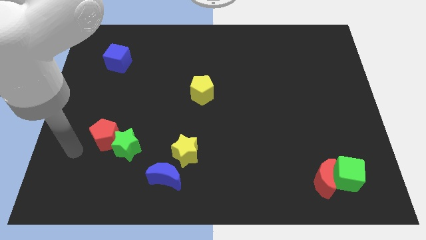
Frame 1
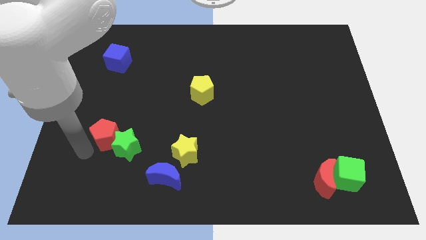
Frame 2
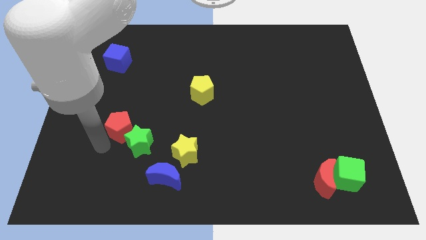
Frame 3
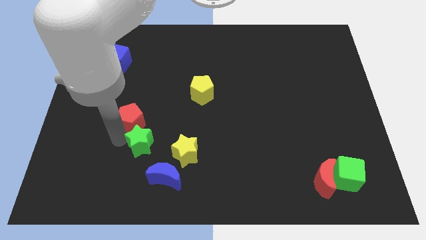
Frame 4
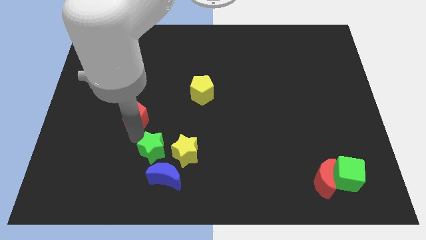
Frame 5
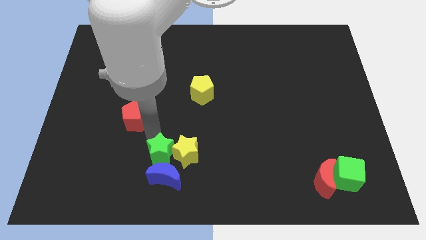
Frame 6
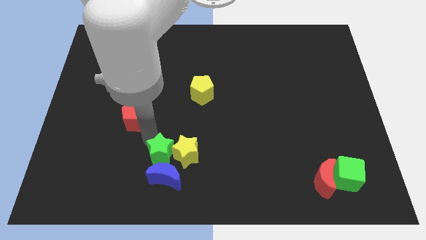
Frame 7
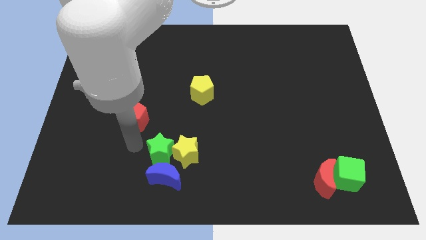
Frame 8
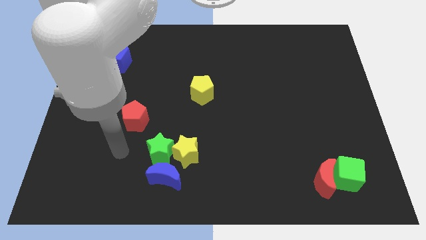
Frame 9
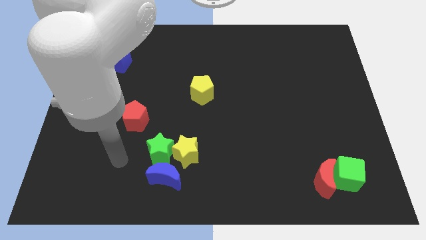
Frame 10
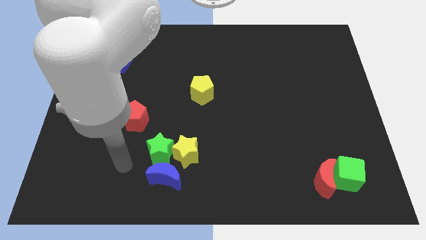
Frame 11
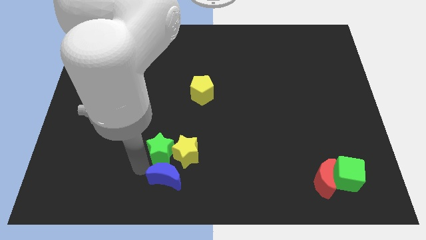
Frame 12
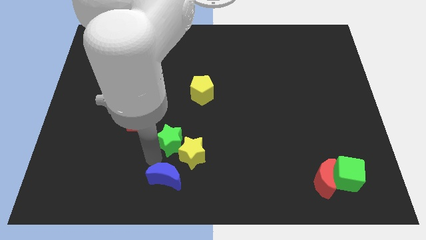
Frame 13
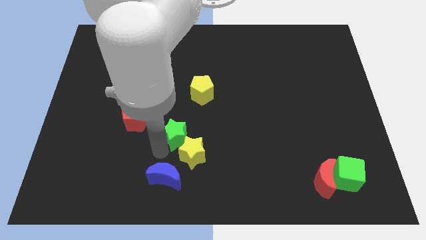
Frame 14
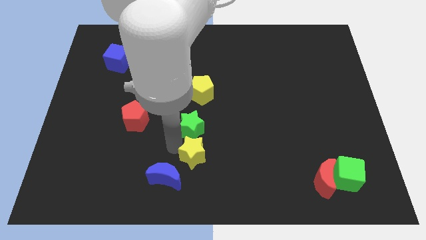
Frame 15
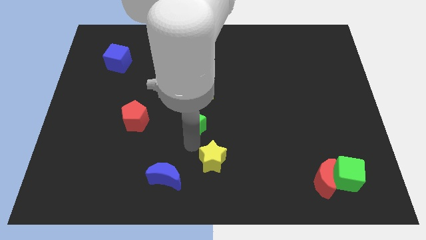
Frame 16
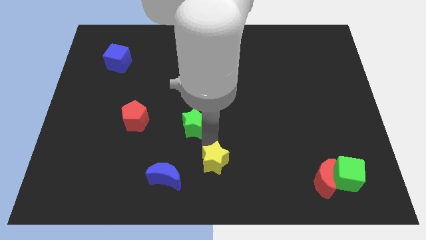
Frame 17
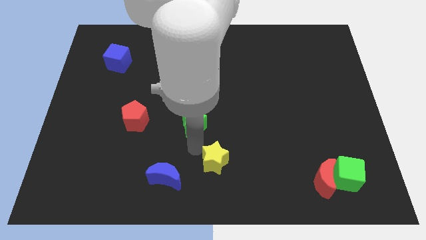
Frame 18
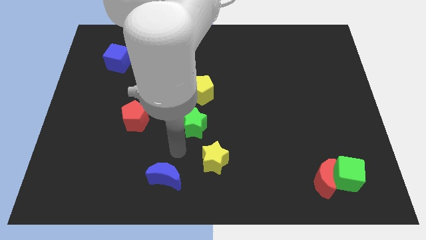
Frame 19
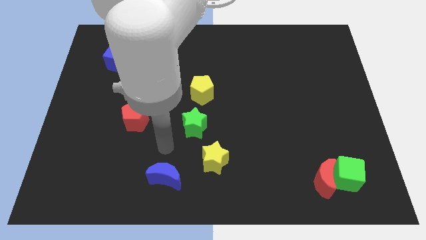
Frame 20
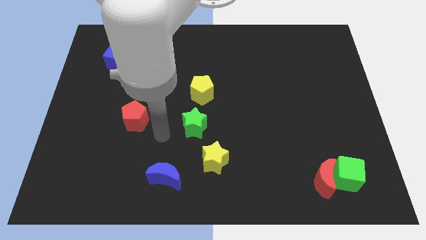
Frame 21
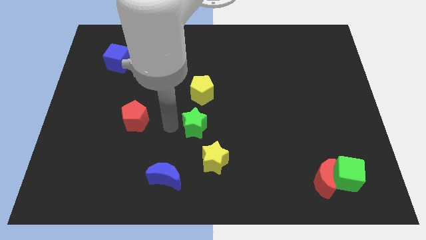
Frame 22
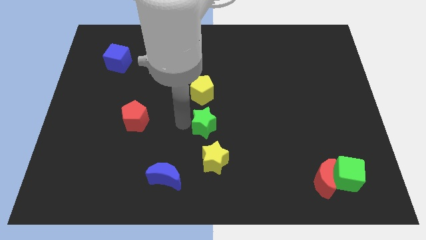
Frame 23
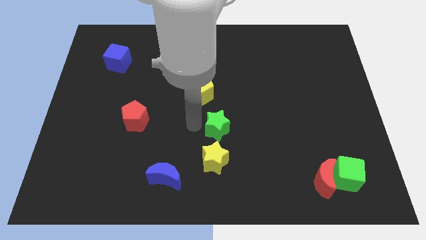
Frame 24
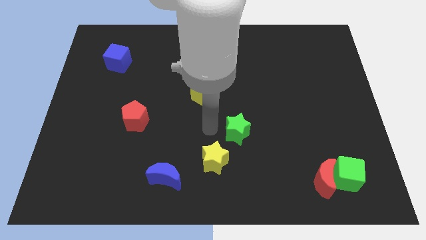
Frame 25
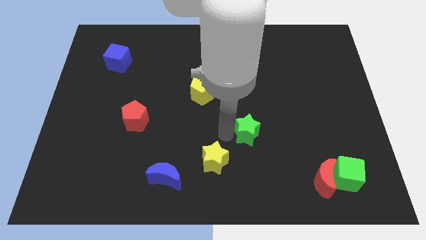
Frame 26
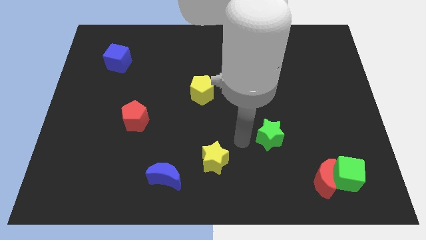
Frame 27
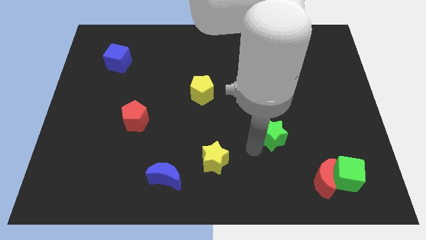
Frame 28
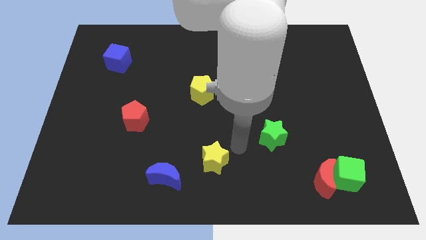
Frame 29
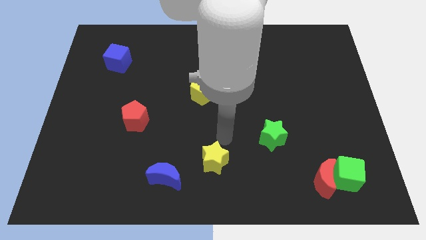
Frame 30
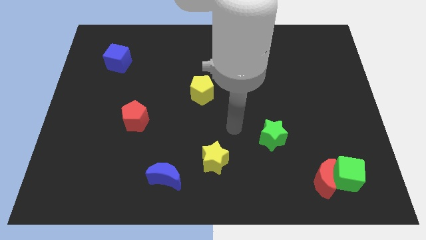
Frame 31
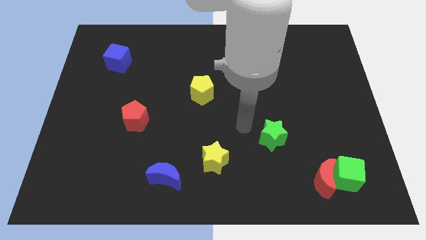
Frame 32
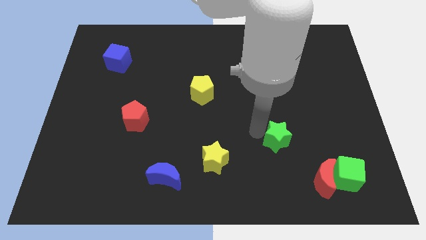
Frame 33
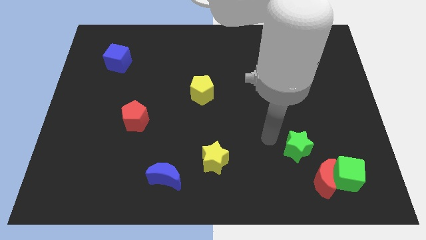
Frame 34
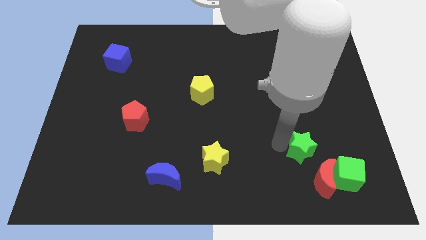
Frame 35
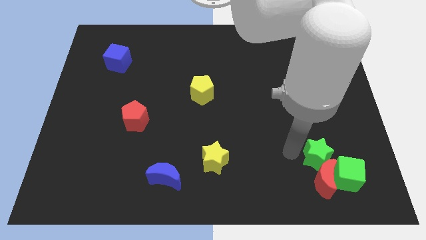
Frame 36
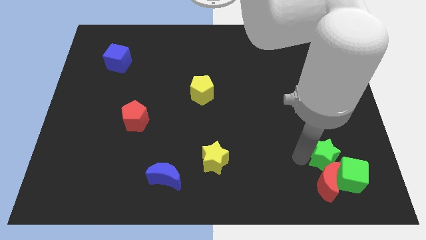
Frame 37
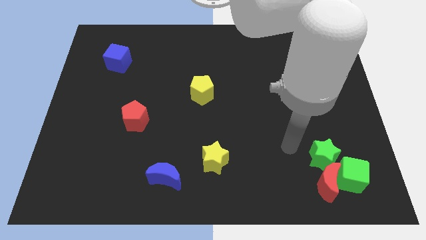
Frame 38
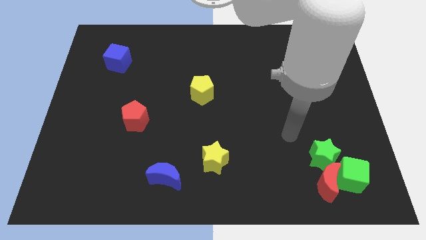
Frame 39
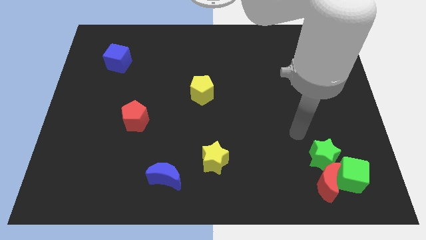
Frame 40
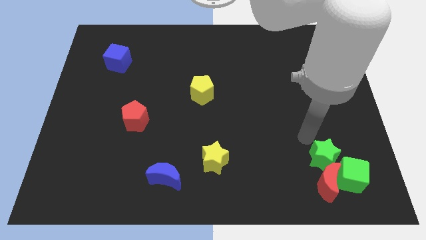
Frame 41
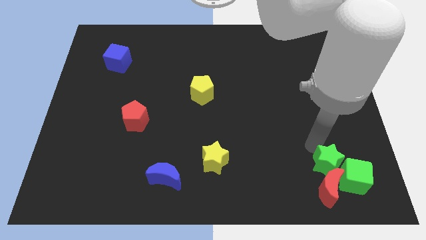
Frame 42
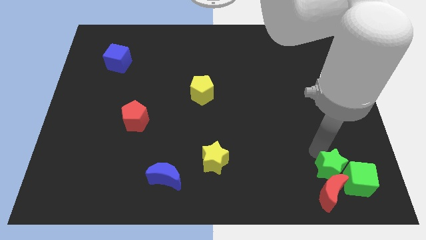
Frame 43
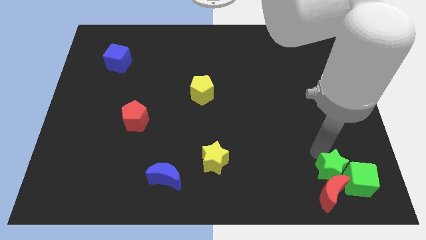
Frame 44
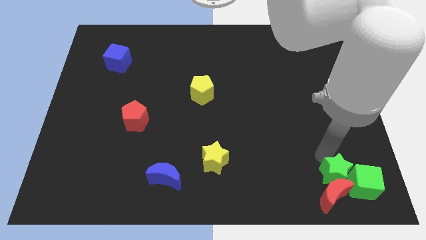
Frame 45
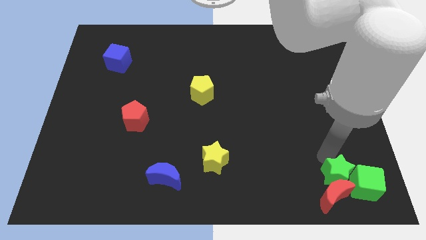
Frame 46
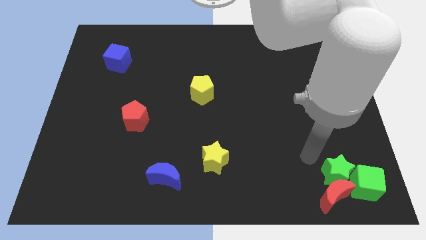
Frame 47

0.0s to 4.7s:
move green star to the top of red moon

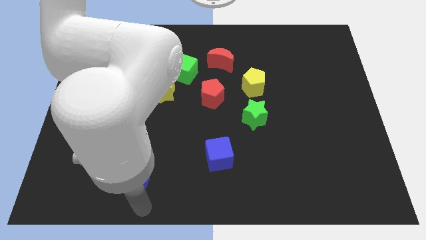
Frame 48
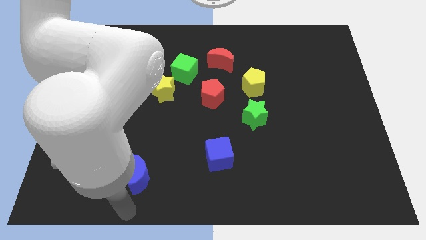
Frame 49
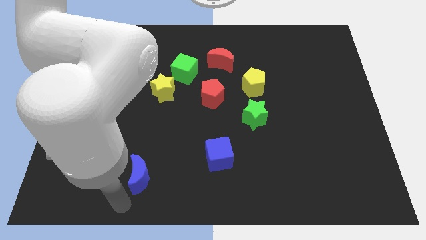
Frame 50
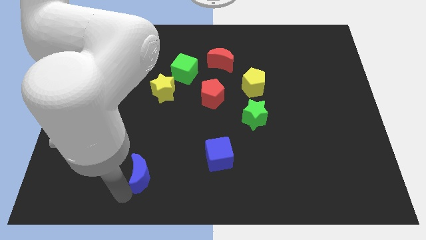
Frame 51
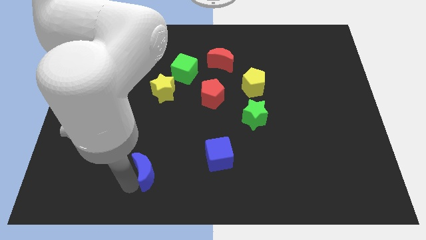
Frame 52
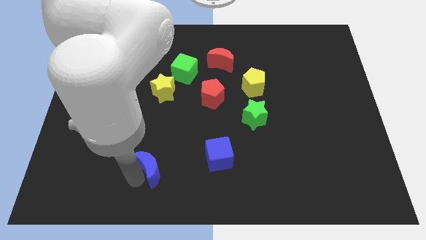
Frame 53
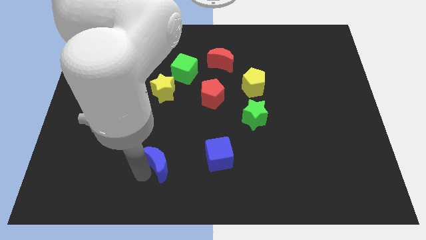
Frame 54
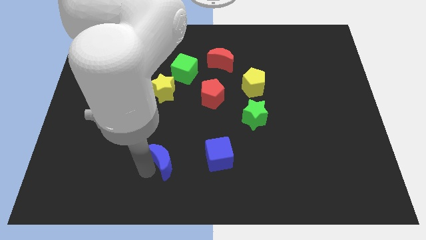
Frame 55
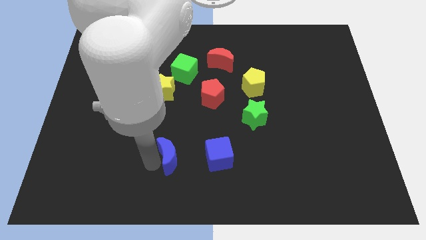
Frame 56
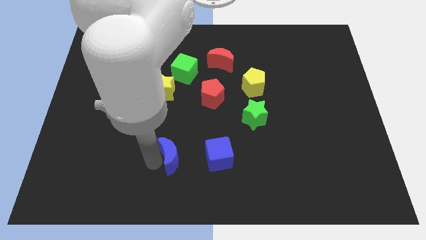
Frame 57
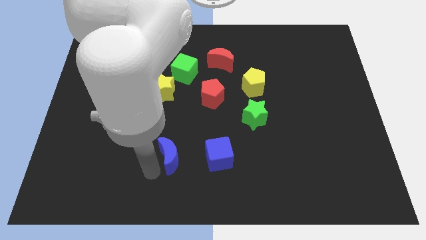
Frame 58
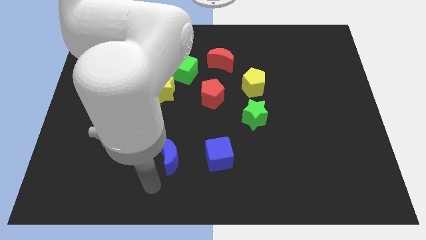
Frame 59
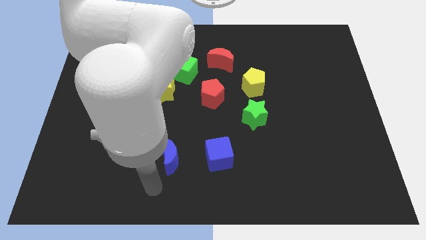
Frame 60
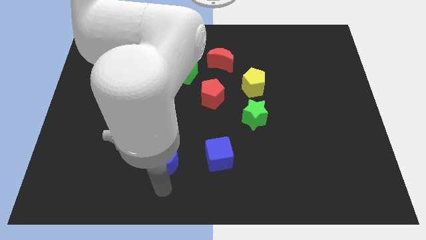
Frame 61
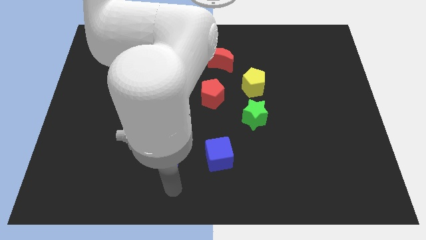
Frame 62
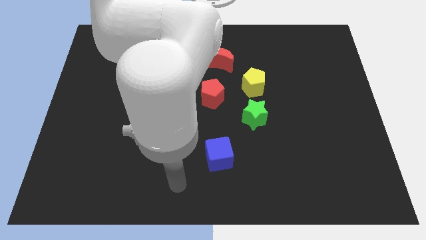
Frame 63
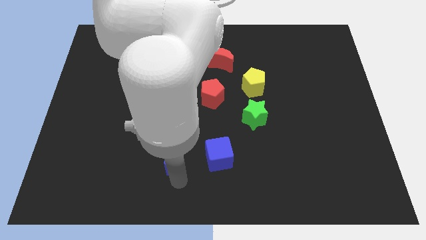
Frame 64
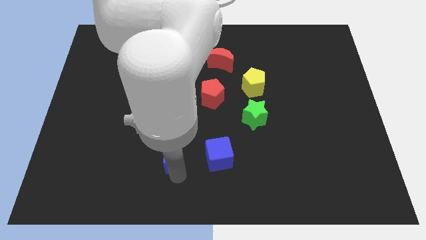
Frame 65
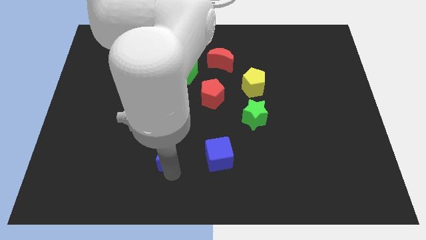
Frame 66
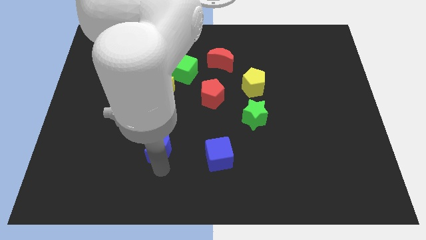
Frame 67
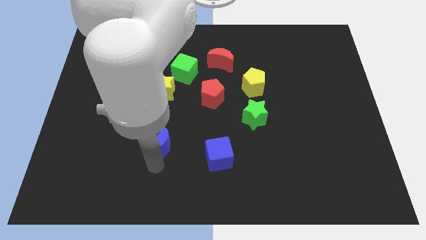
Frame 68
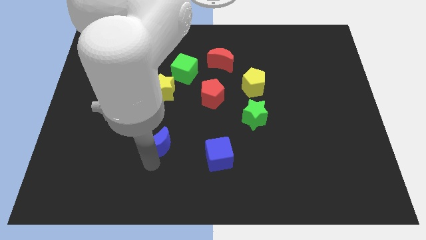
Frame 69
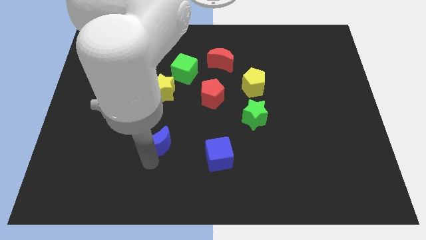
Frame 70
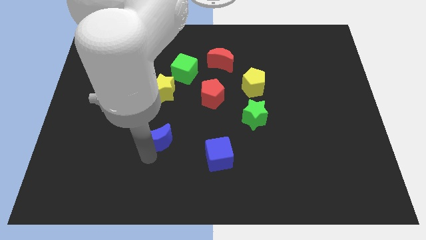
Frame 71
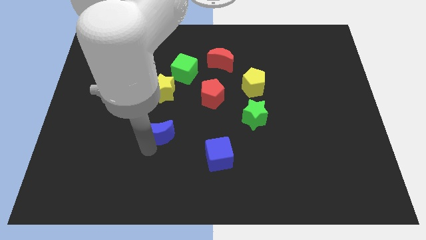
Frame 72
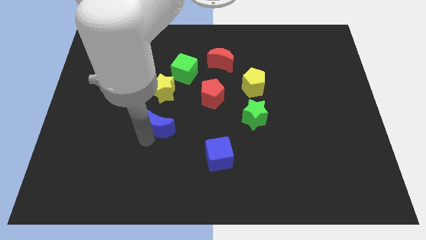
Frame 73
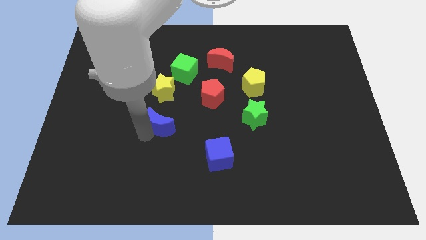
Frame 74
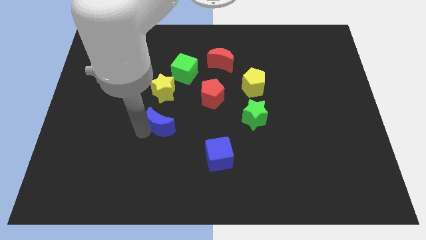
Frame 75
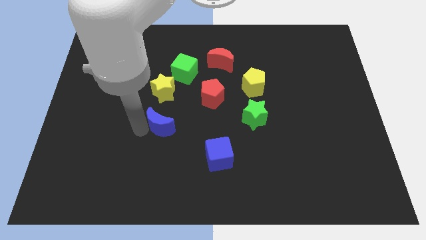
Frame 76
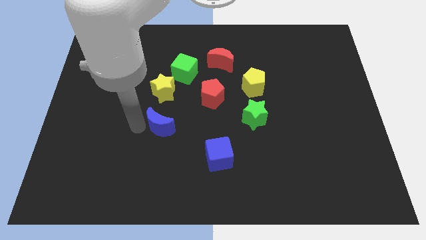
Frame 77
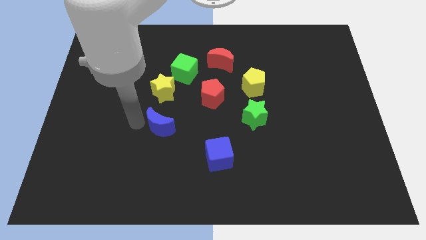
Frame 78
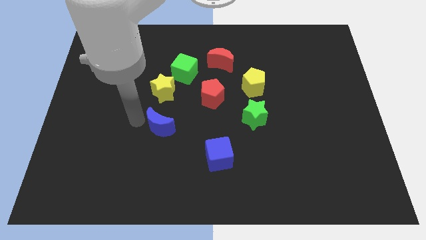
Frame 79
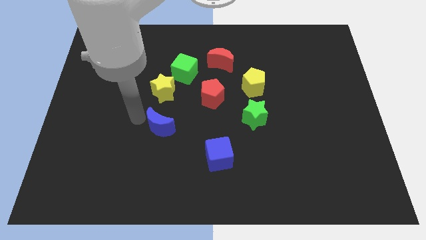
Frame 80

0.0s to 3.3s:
push the blue crescent to the bottom of the yellow star

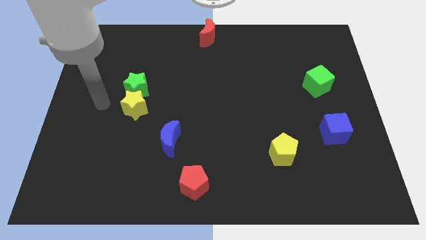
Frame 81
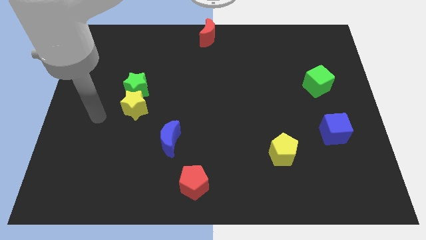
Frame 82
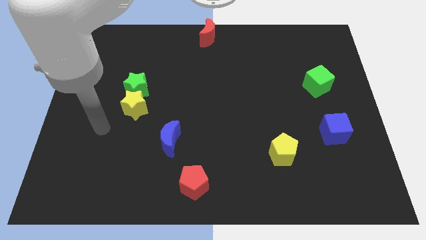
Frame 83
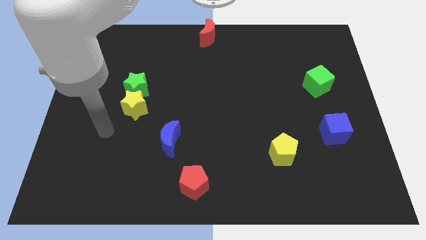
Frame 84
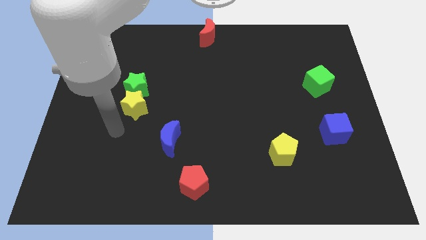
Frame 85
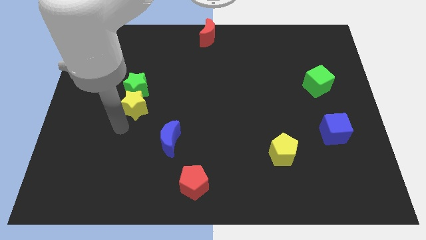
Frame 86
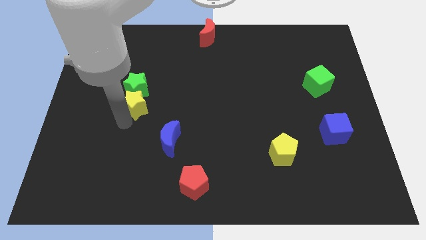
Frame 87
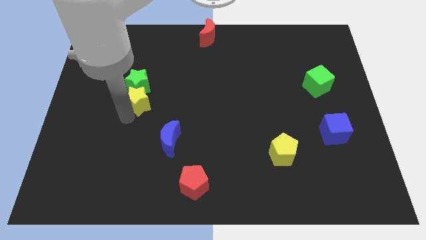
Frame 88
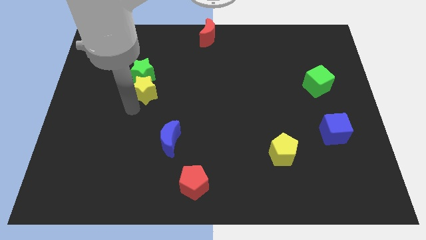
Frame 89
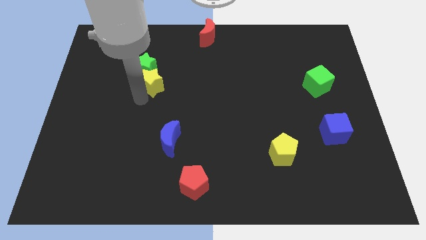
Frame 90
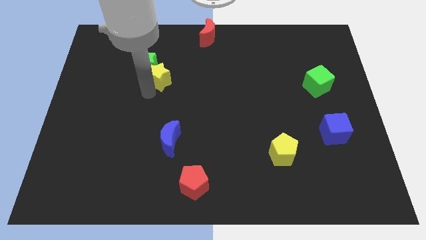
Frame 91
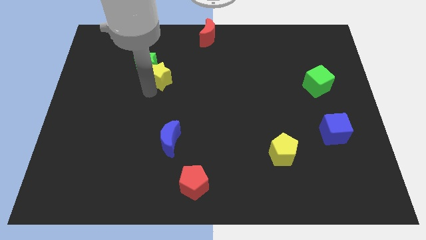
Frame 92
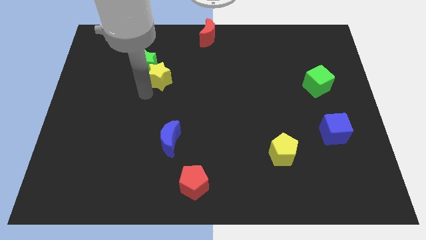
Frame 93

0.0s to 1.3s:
push the group of stars towards the top
